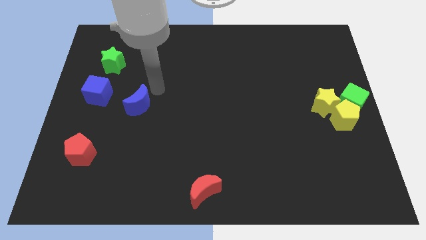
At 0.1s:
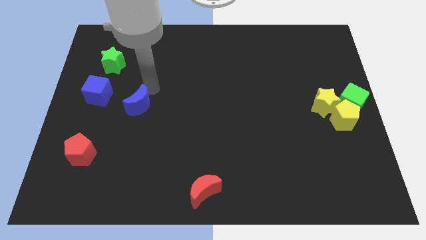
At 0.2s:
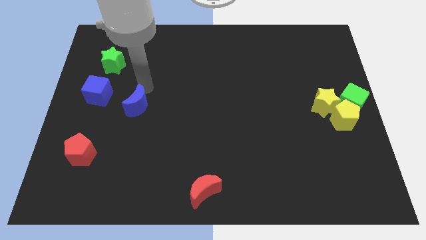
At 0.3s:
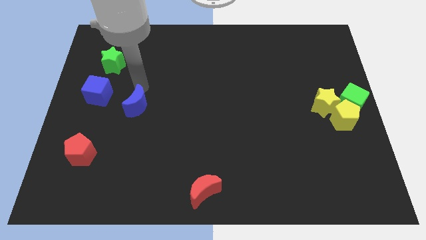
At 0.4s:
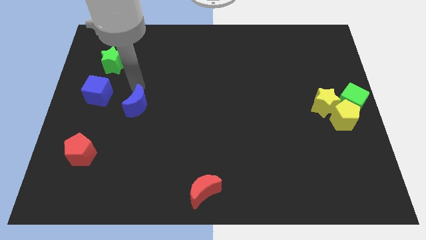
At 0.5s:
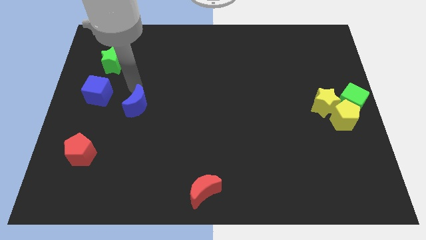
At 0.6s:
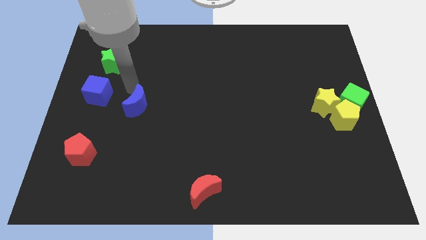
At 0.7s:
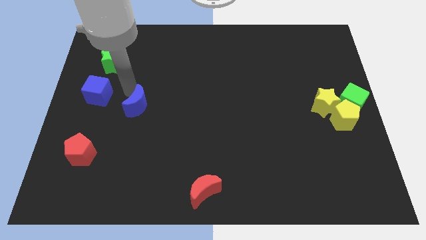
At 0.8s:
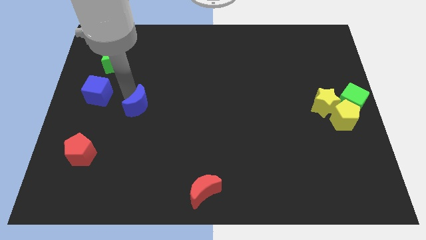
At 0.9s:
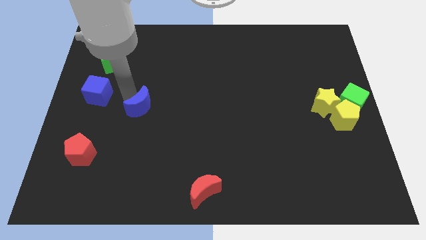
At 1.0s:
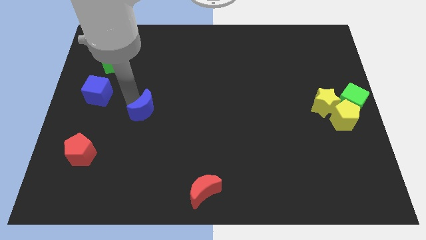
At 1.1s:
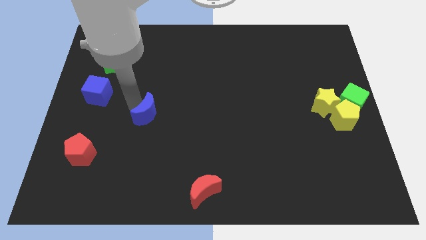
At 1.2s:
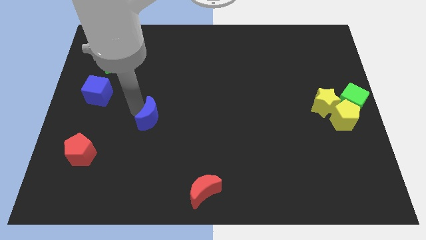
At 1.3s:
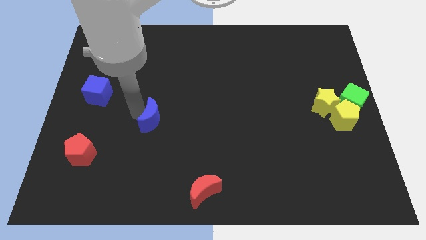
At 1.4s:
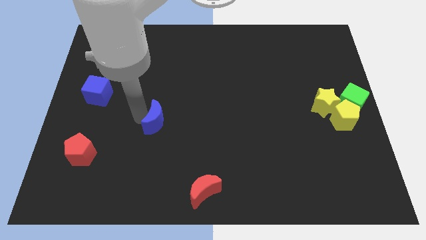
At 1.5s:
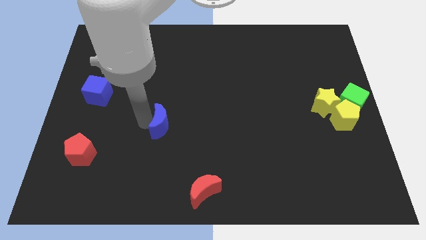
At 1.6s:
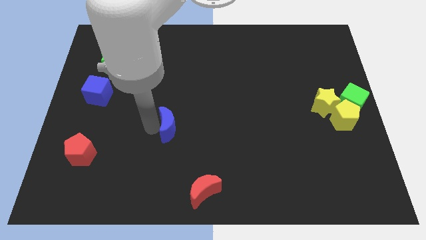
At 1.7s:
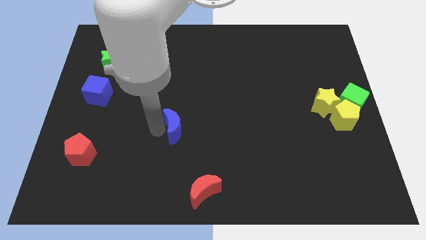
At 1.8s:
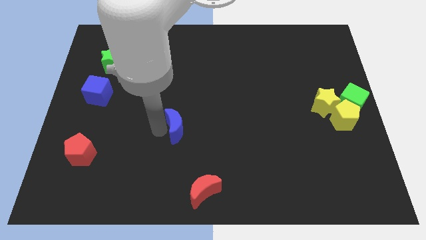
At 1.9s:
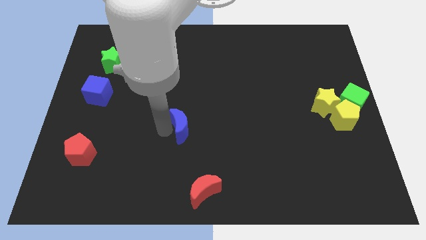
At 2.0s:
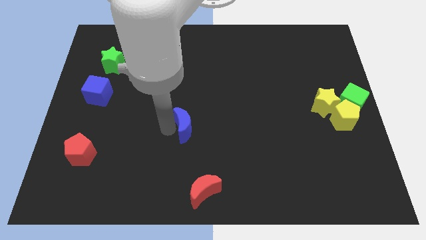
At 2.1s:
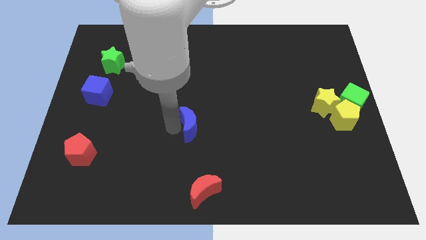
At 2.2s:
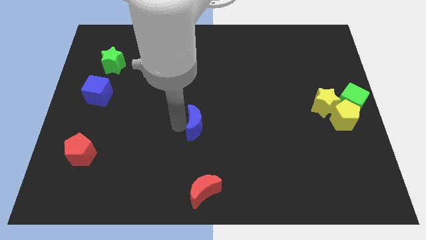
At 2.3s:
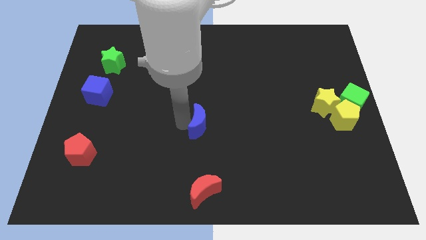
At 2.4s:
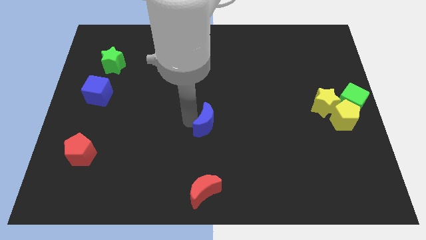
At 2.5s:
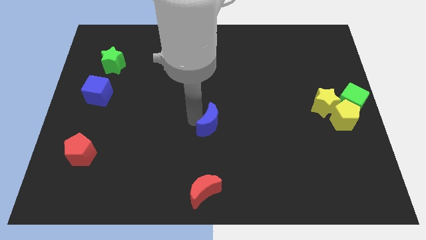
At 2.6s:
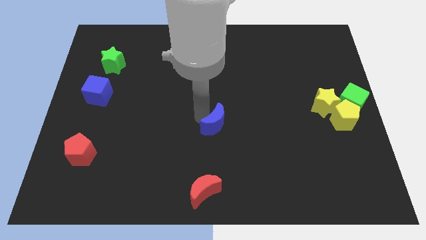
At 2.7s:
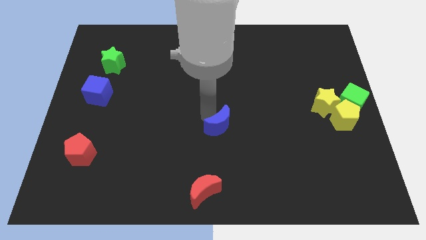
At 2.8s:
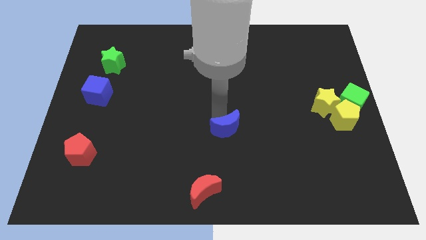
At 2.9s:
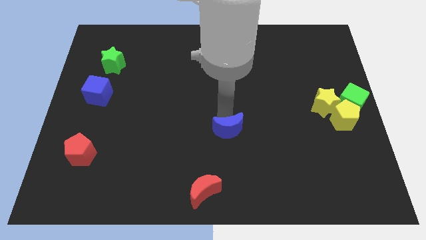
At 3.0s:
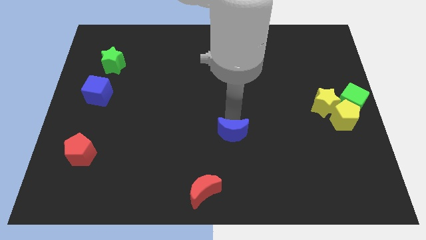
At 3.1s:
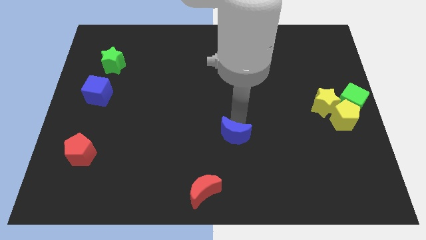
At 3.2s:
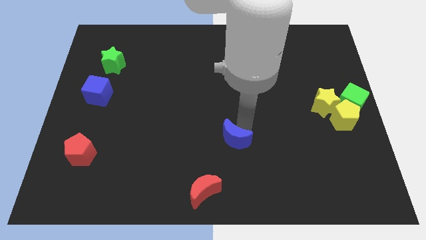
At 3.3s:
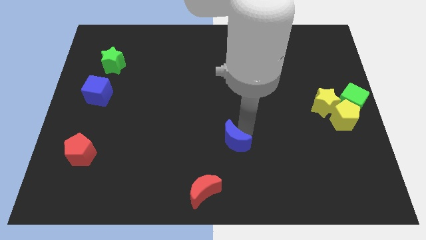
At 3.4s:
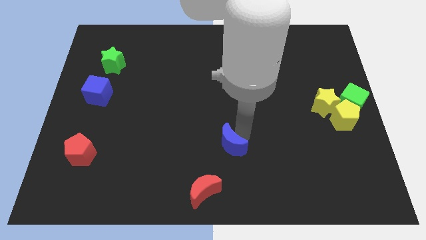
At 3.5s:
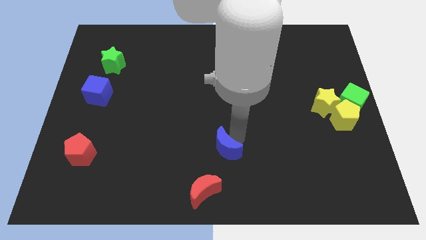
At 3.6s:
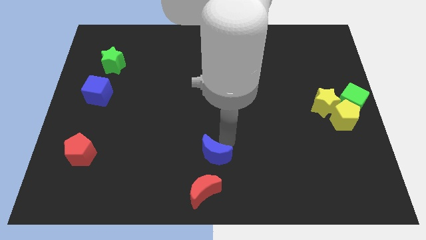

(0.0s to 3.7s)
push the blue moon towards the red moon

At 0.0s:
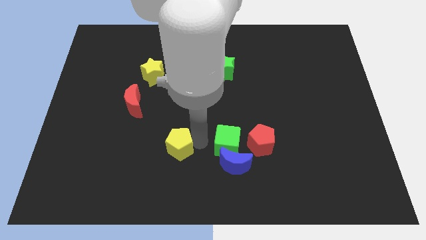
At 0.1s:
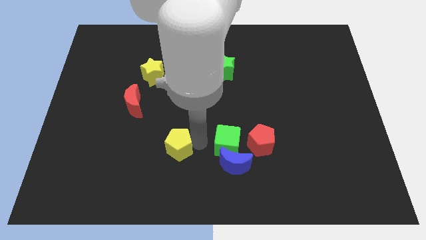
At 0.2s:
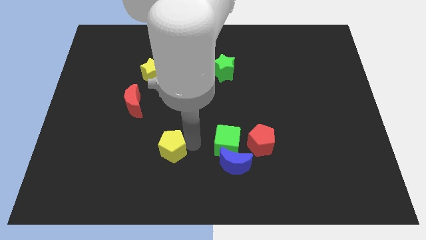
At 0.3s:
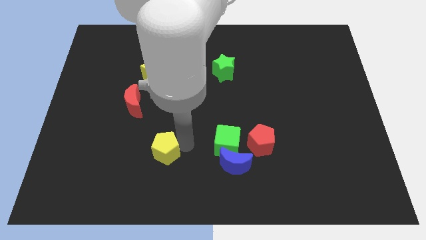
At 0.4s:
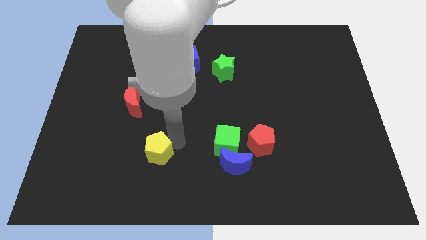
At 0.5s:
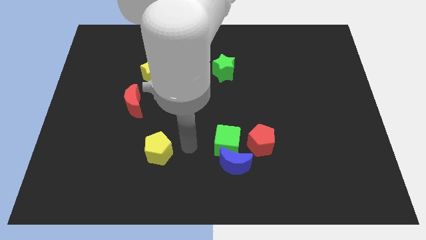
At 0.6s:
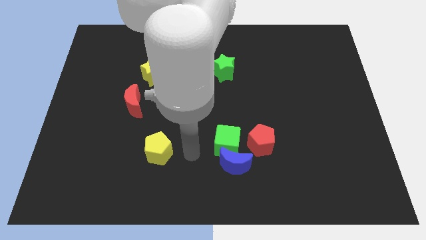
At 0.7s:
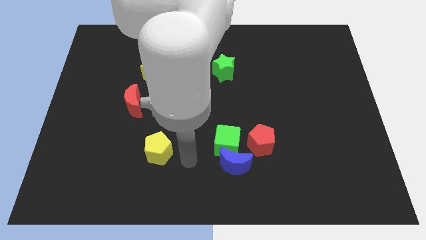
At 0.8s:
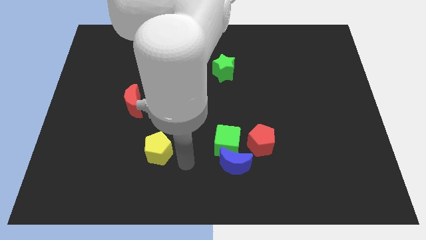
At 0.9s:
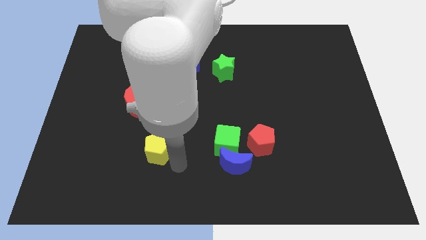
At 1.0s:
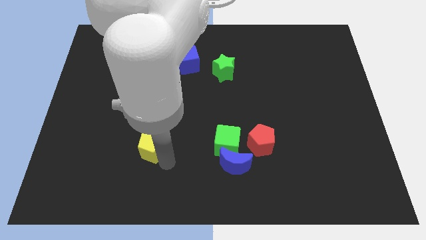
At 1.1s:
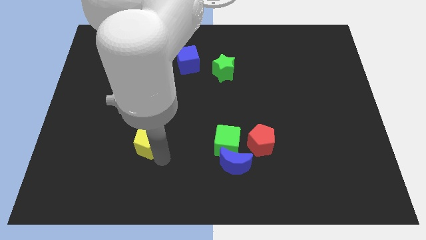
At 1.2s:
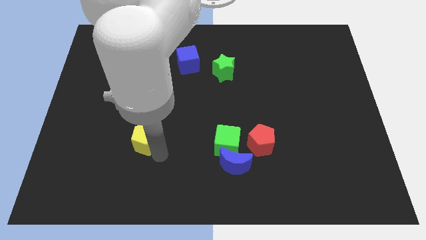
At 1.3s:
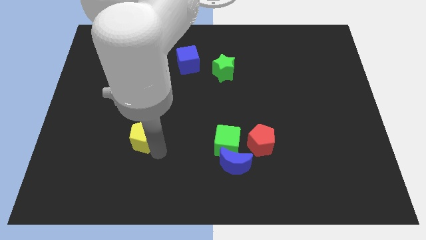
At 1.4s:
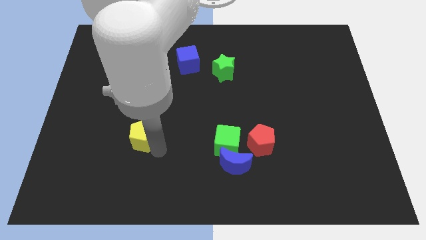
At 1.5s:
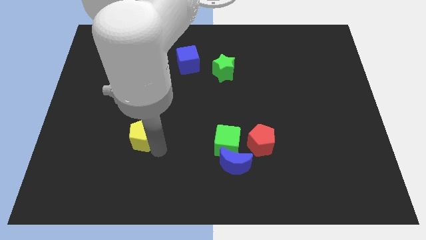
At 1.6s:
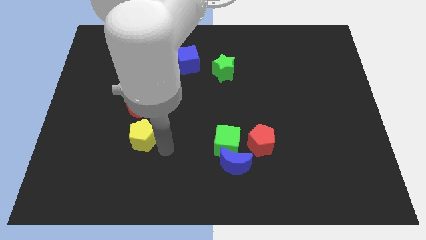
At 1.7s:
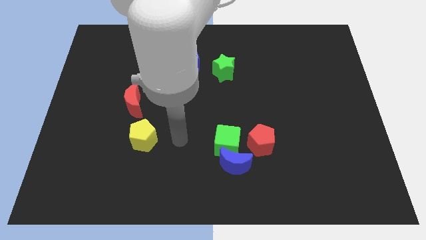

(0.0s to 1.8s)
place the yellow pentagon down to the red moon

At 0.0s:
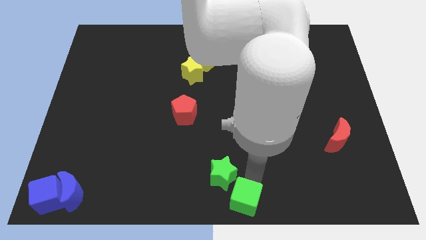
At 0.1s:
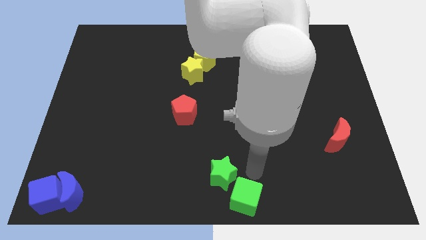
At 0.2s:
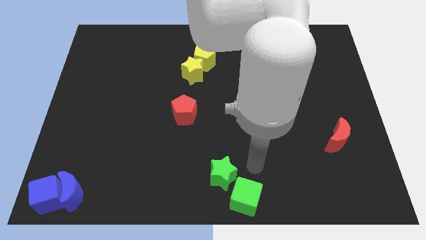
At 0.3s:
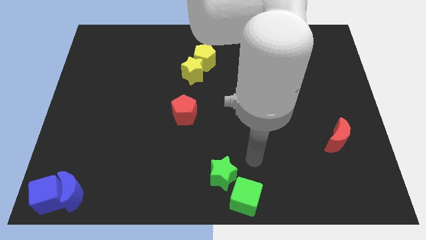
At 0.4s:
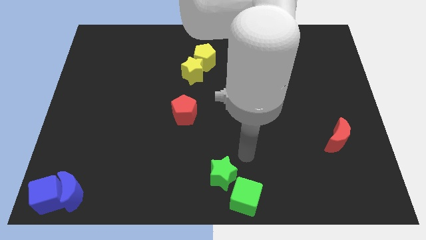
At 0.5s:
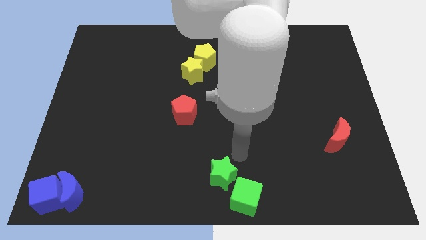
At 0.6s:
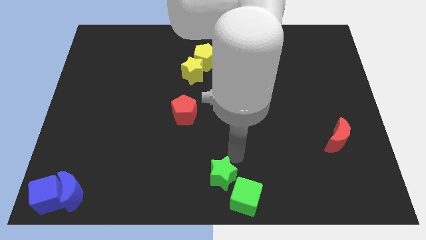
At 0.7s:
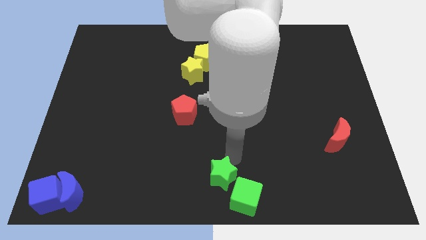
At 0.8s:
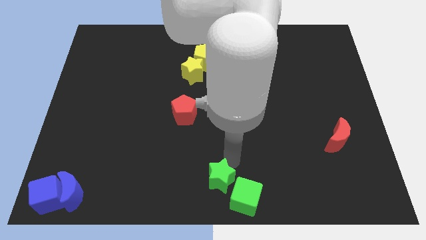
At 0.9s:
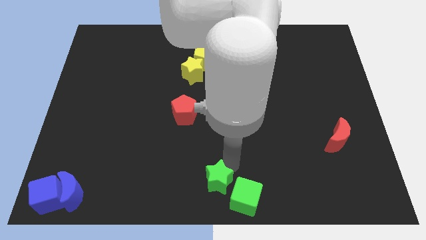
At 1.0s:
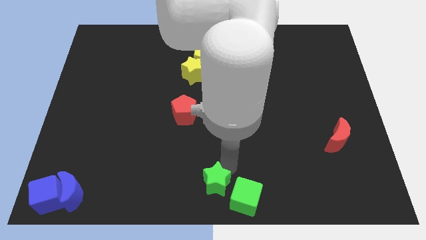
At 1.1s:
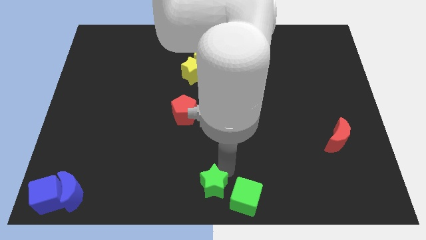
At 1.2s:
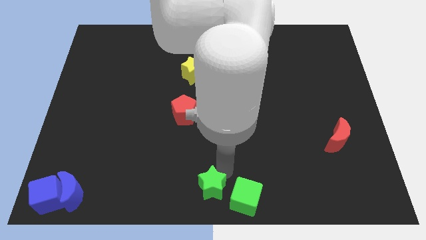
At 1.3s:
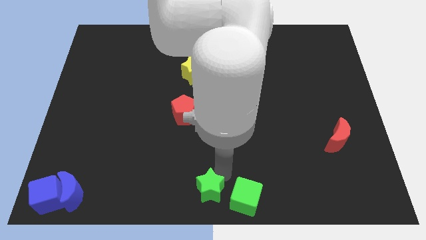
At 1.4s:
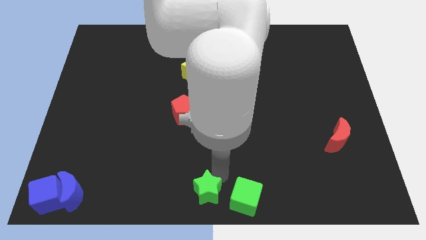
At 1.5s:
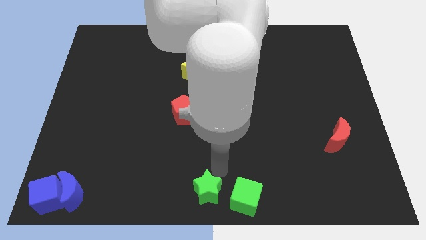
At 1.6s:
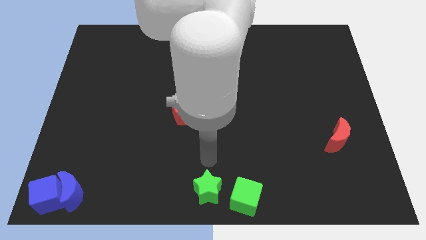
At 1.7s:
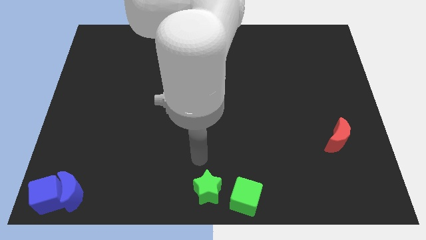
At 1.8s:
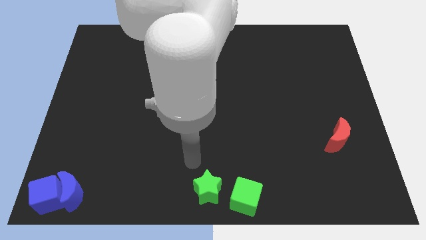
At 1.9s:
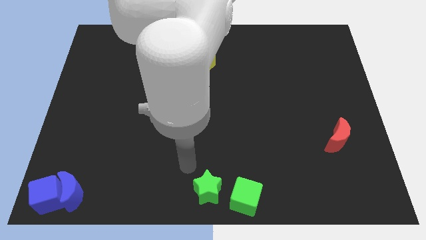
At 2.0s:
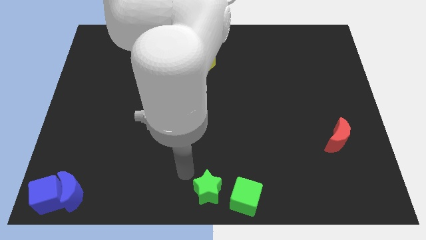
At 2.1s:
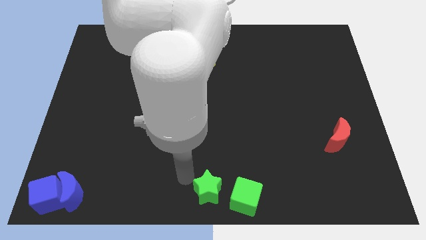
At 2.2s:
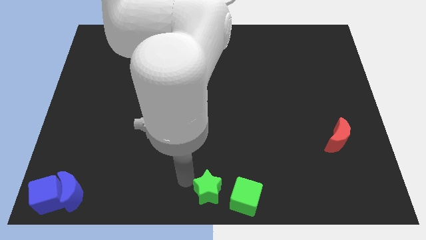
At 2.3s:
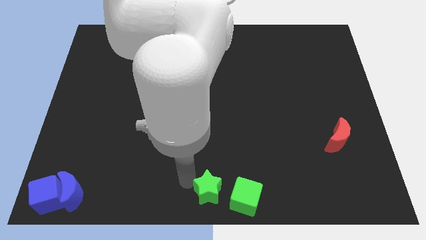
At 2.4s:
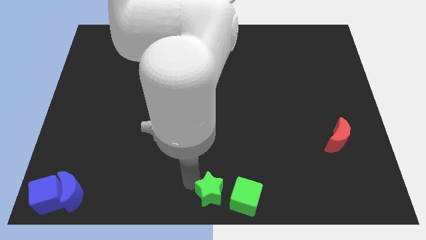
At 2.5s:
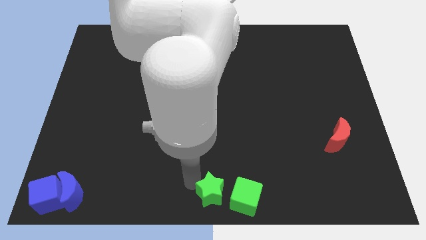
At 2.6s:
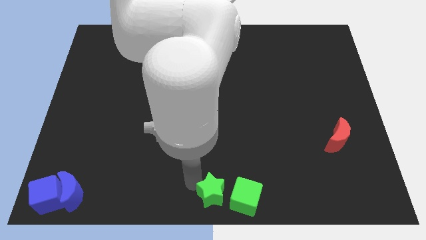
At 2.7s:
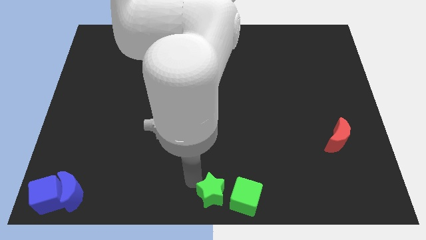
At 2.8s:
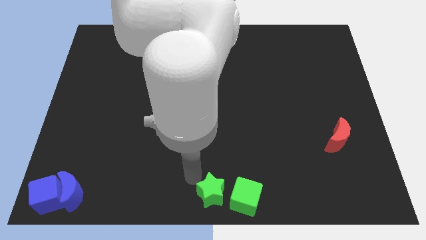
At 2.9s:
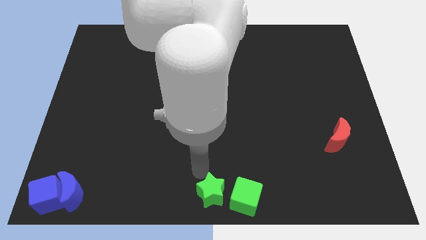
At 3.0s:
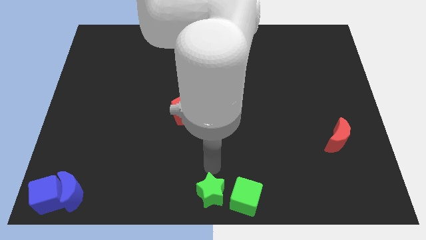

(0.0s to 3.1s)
place green star beside green cube

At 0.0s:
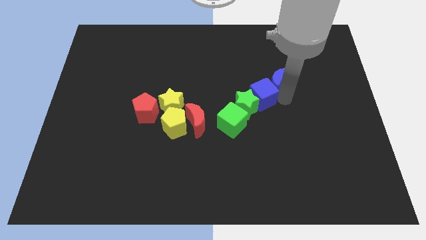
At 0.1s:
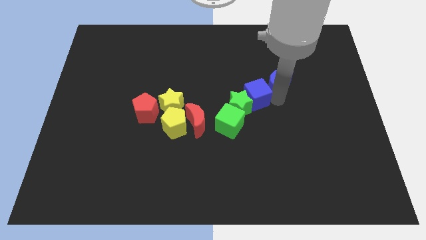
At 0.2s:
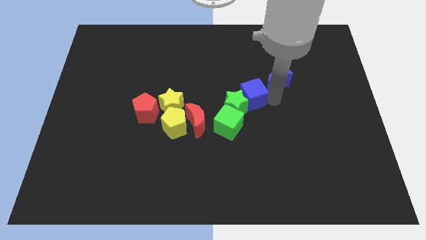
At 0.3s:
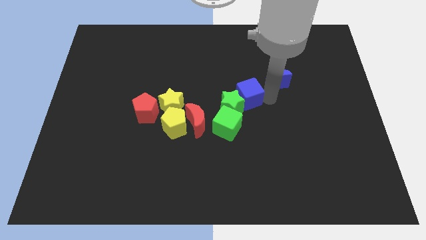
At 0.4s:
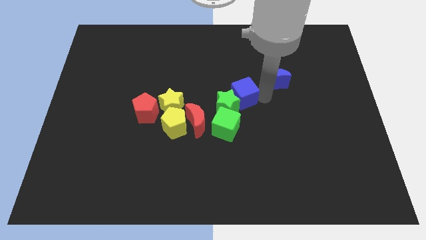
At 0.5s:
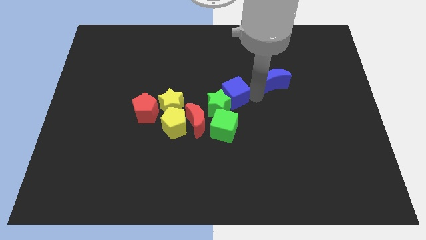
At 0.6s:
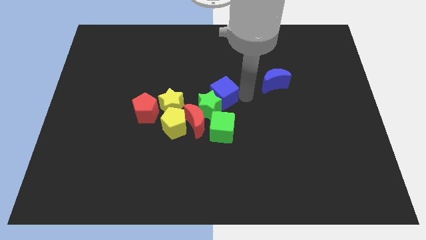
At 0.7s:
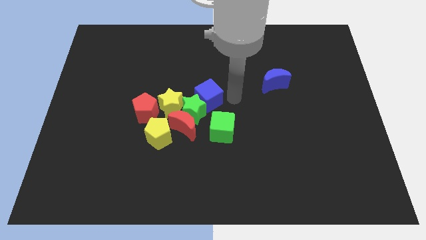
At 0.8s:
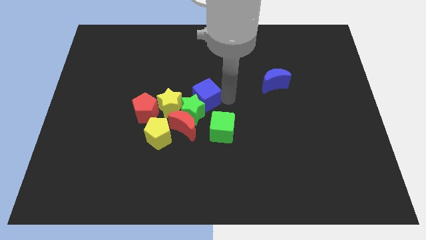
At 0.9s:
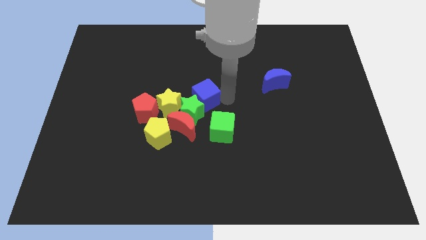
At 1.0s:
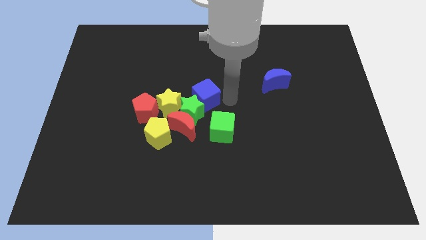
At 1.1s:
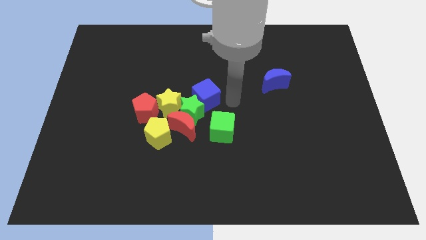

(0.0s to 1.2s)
push the blue cube and green star away from the blue crescent
